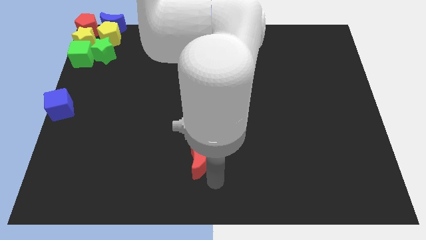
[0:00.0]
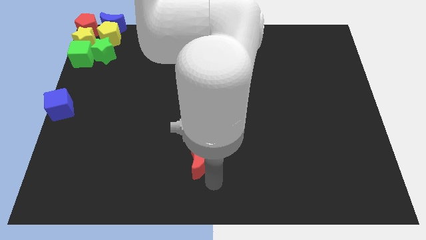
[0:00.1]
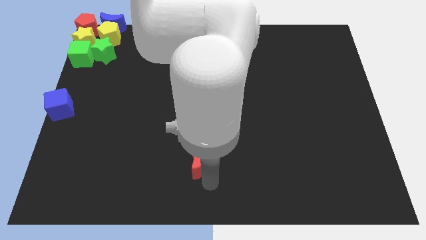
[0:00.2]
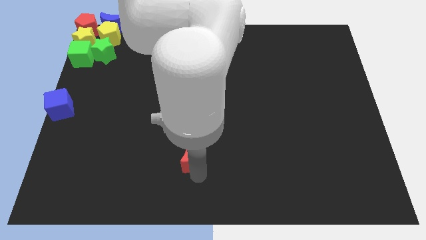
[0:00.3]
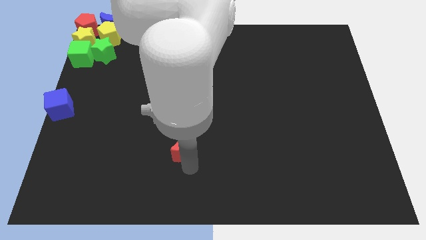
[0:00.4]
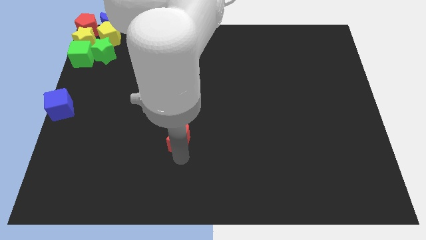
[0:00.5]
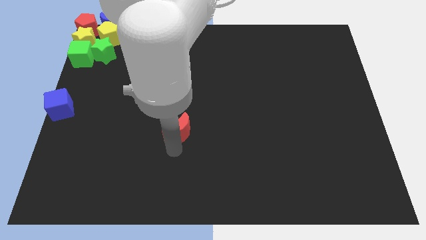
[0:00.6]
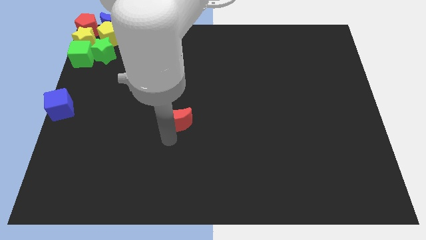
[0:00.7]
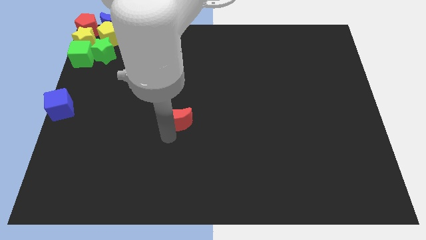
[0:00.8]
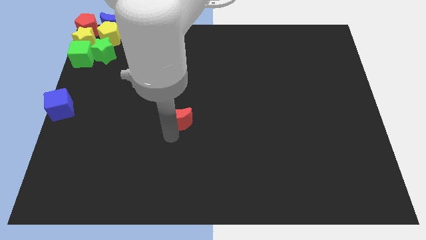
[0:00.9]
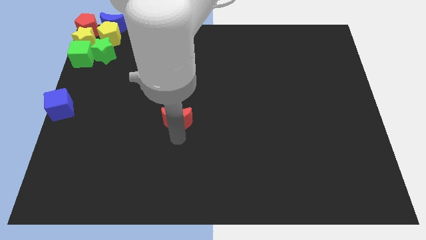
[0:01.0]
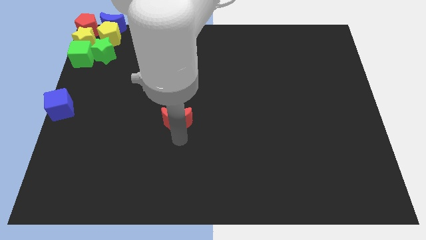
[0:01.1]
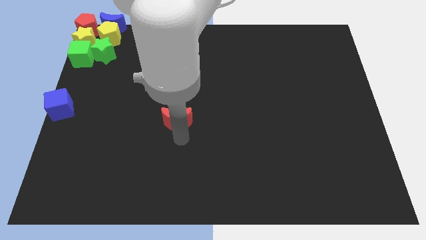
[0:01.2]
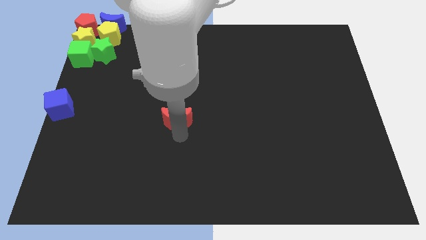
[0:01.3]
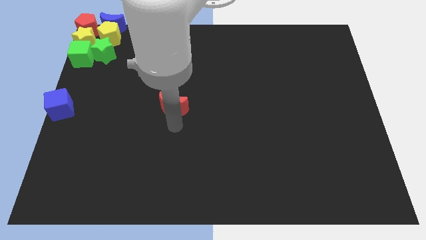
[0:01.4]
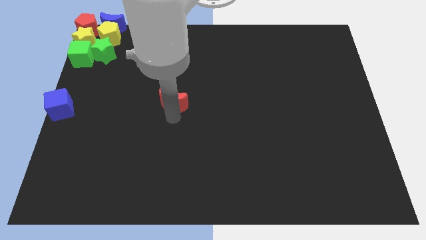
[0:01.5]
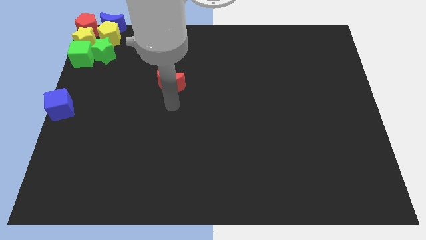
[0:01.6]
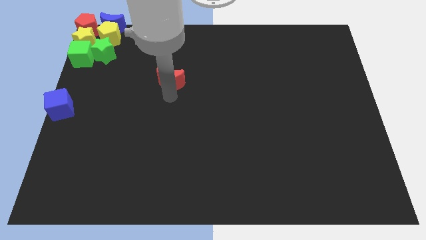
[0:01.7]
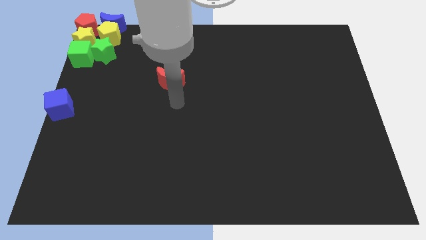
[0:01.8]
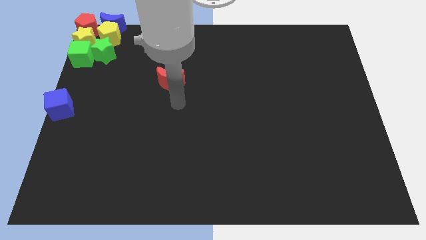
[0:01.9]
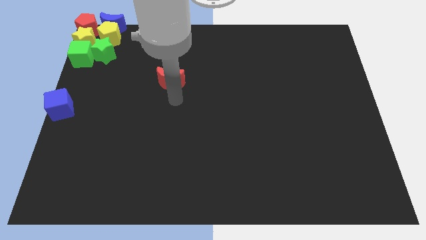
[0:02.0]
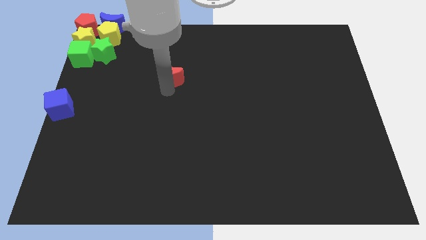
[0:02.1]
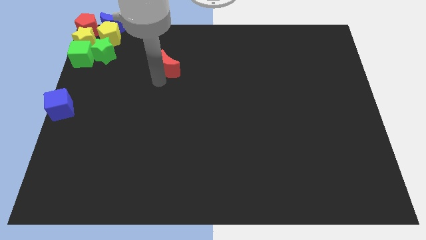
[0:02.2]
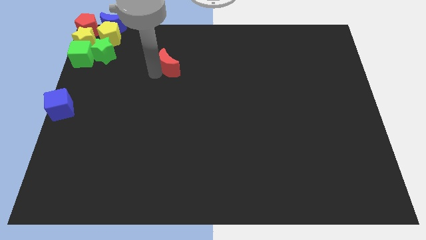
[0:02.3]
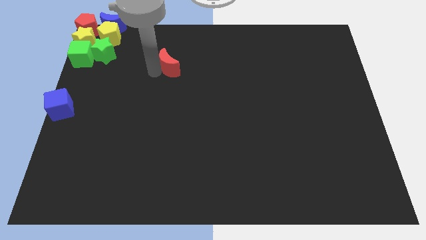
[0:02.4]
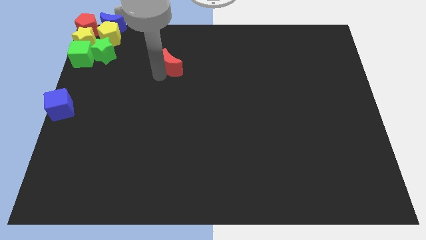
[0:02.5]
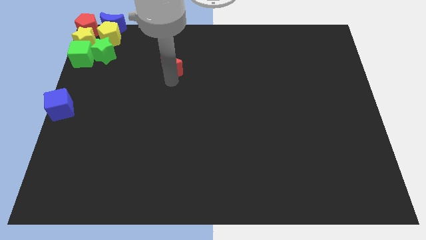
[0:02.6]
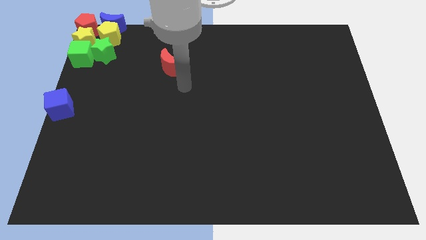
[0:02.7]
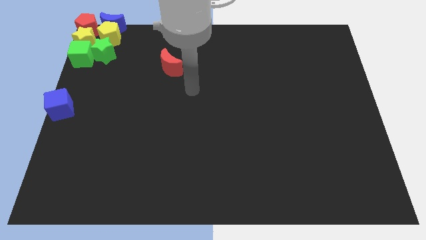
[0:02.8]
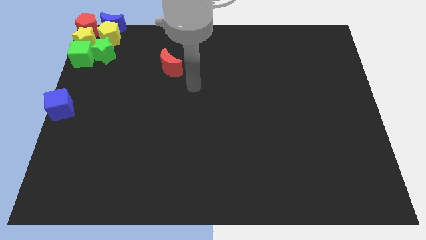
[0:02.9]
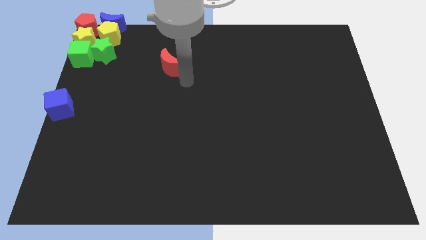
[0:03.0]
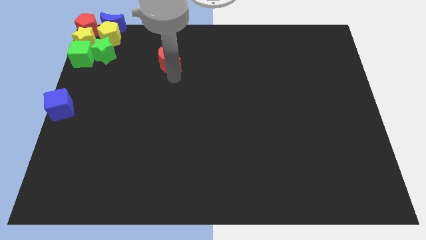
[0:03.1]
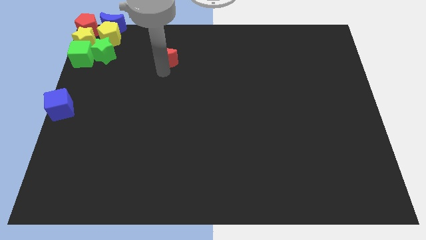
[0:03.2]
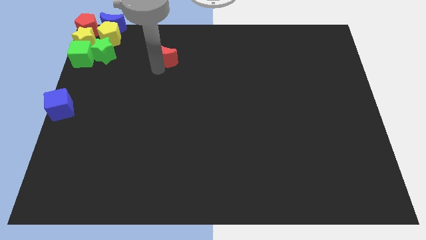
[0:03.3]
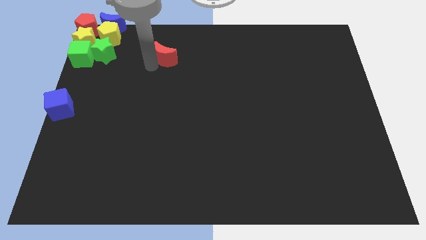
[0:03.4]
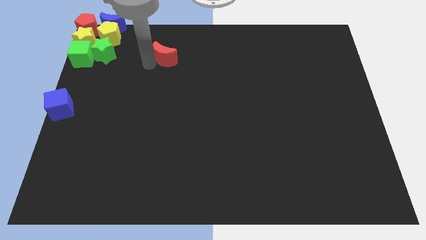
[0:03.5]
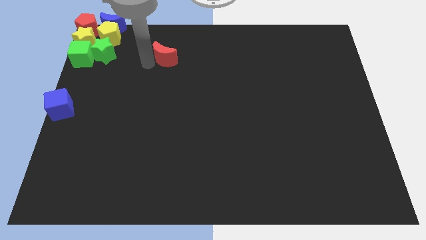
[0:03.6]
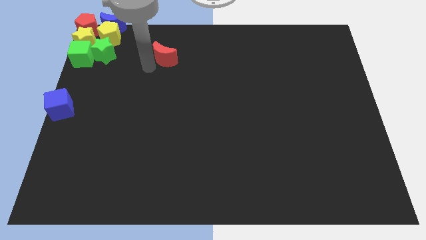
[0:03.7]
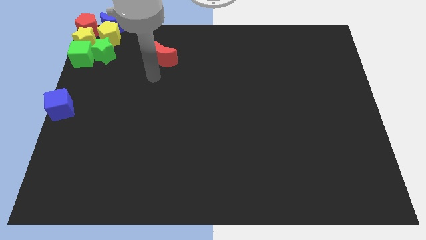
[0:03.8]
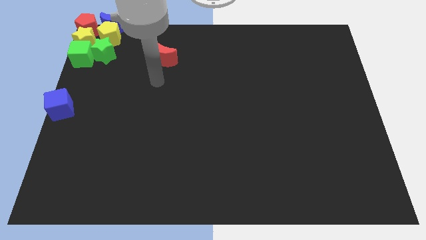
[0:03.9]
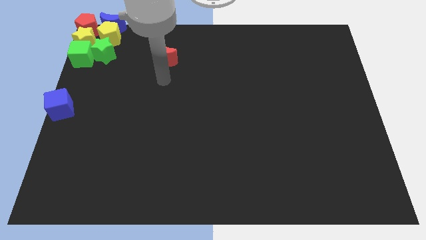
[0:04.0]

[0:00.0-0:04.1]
push the red crescent towards the top left side of the board

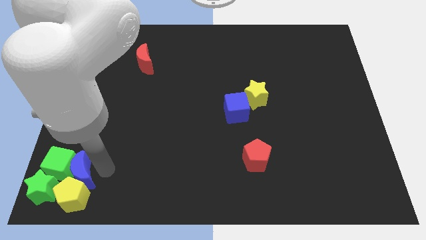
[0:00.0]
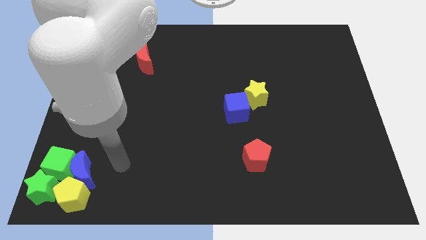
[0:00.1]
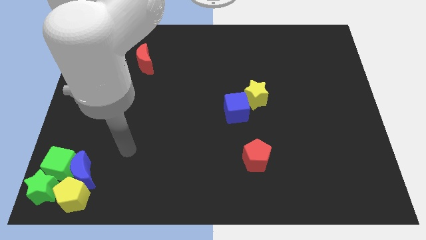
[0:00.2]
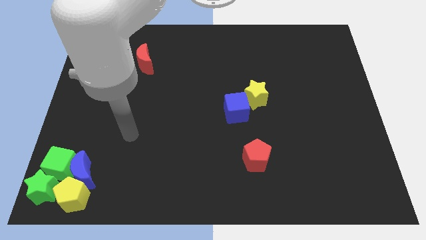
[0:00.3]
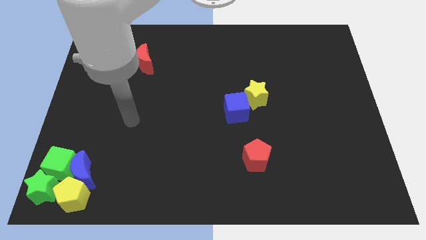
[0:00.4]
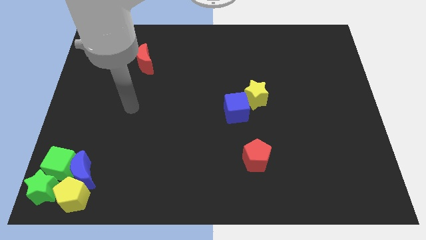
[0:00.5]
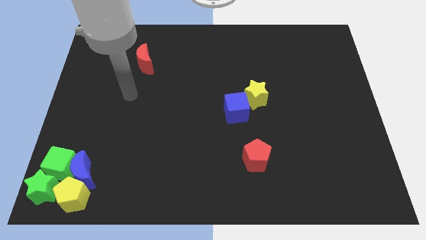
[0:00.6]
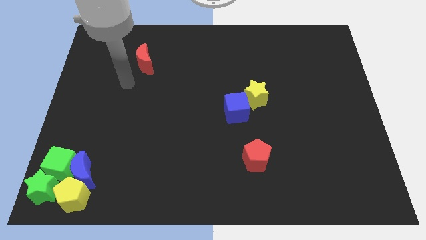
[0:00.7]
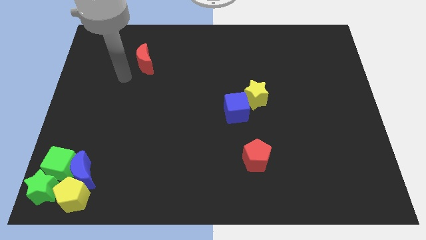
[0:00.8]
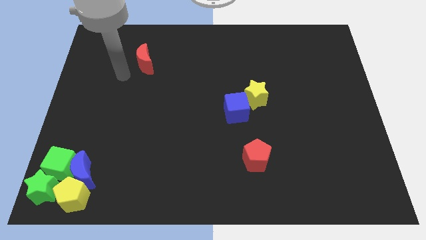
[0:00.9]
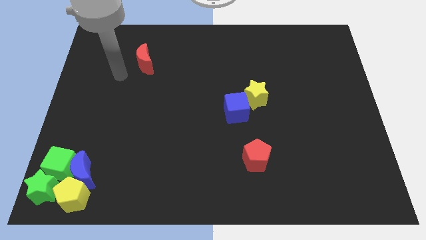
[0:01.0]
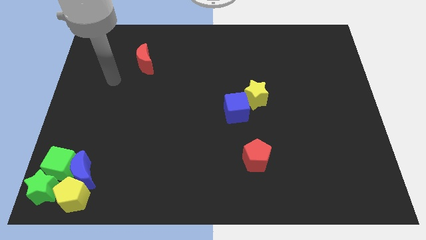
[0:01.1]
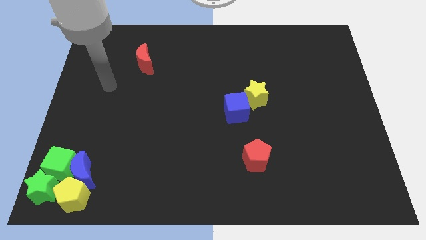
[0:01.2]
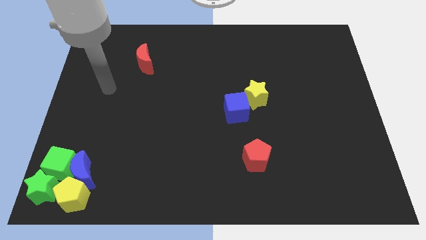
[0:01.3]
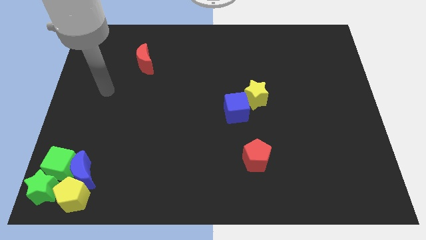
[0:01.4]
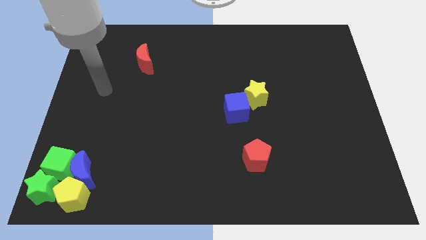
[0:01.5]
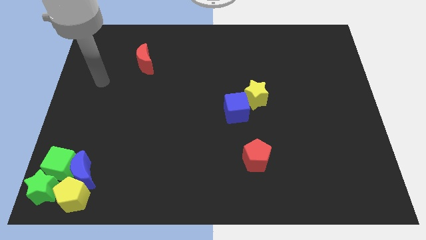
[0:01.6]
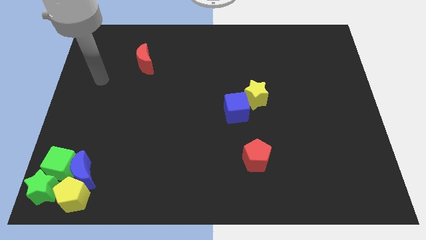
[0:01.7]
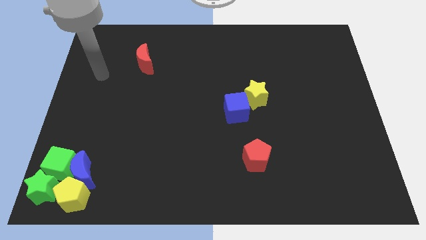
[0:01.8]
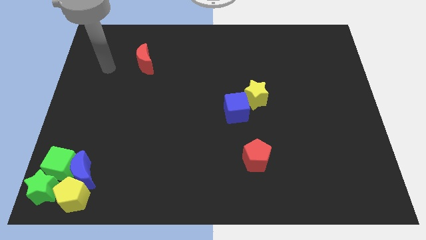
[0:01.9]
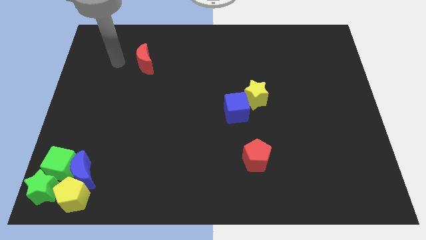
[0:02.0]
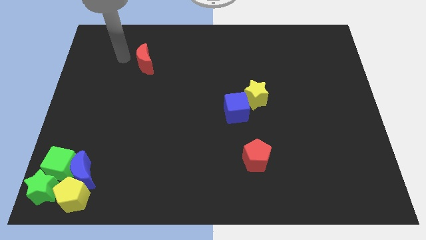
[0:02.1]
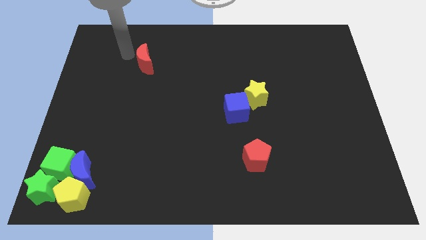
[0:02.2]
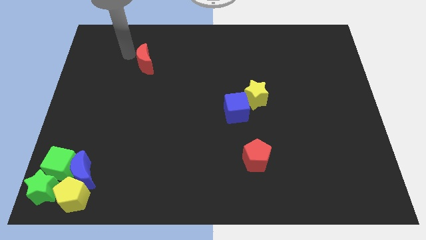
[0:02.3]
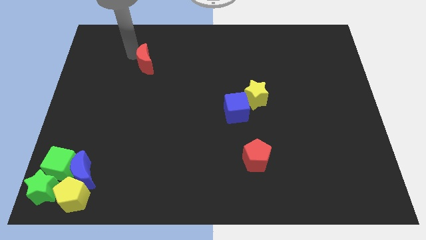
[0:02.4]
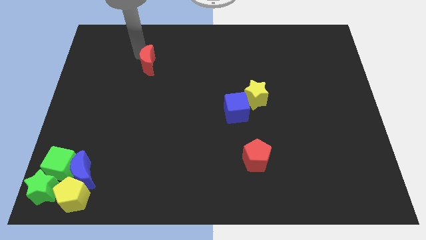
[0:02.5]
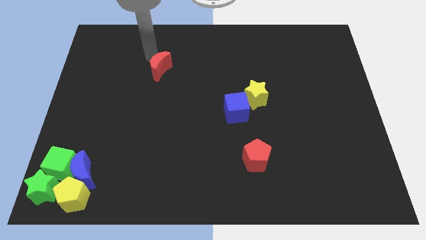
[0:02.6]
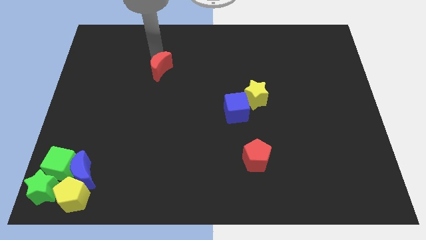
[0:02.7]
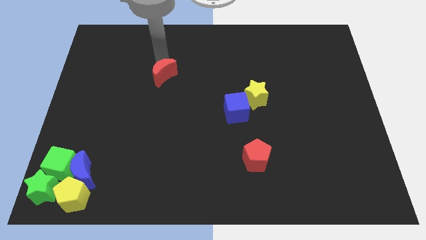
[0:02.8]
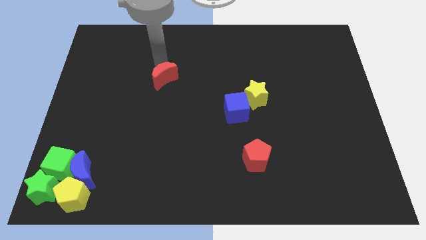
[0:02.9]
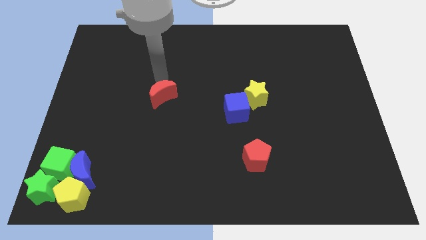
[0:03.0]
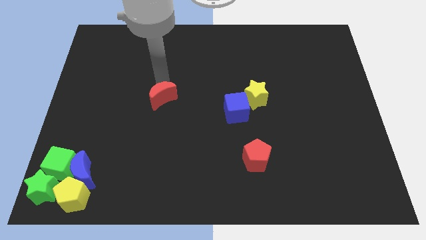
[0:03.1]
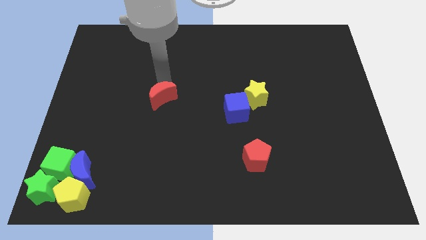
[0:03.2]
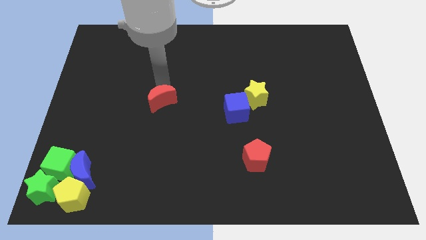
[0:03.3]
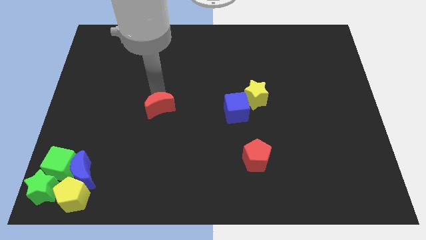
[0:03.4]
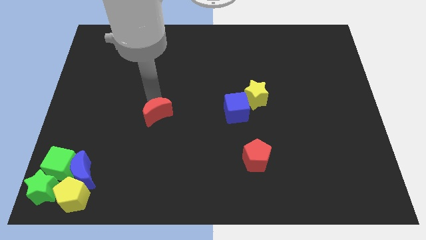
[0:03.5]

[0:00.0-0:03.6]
move the red crescent to the left of the blue cube

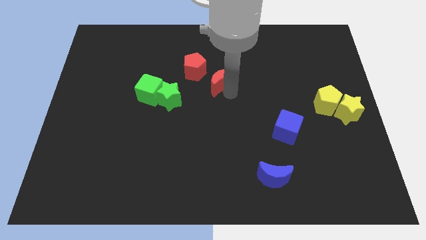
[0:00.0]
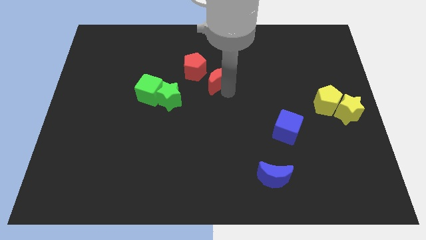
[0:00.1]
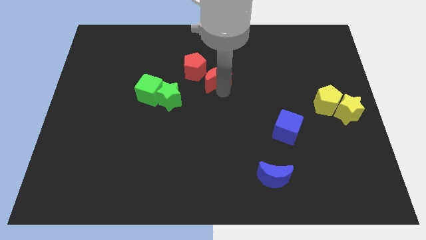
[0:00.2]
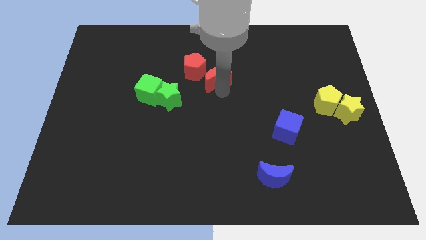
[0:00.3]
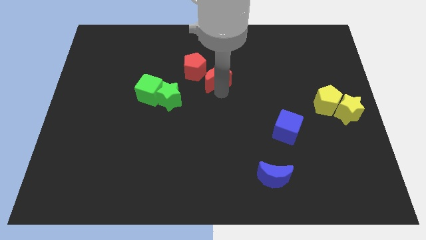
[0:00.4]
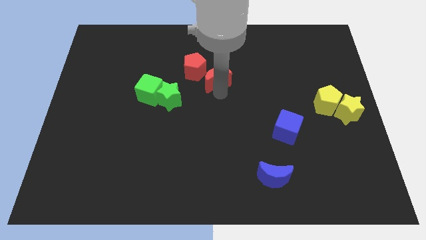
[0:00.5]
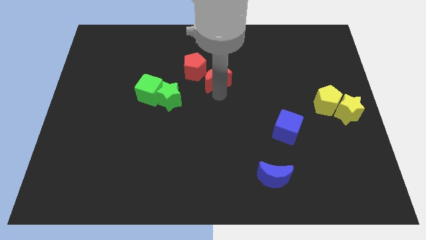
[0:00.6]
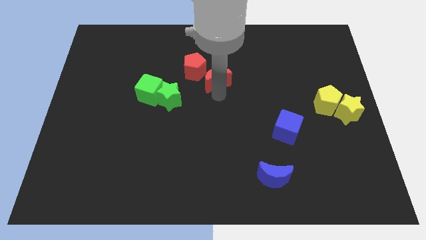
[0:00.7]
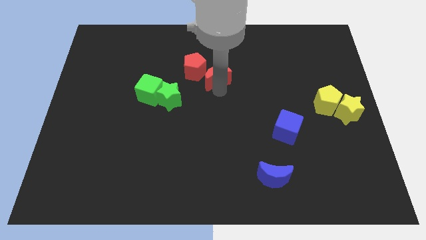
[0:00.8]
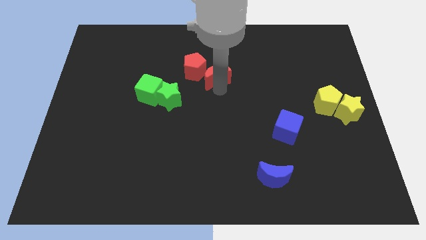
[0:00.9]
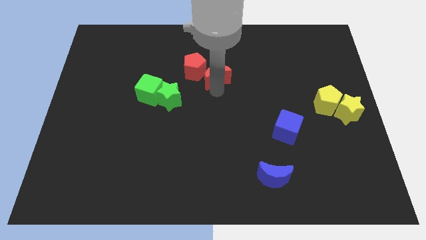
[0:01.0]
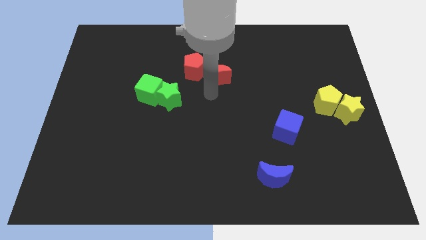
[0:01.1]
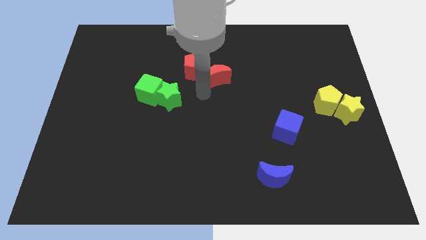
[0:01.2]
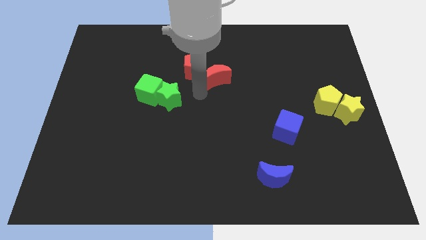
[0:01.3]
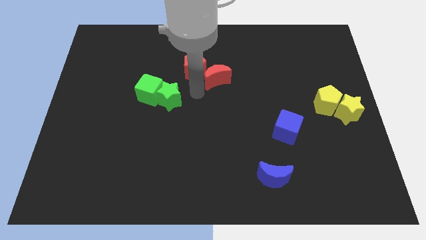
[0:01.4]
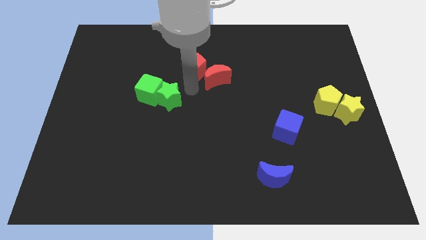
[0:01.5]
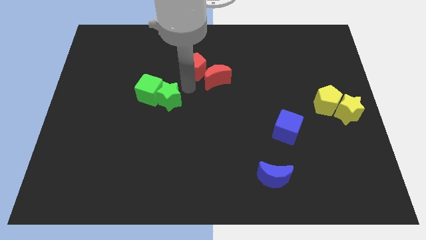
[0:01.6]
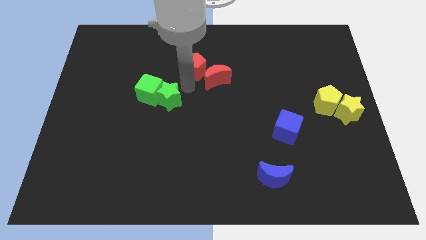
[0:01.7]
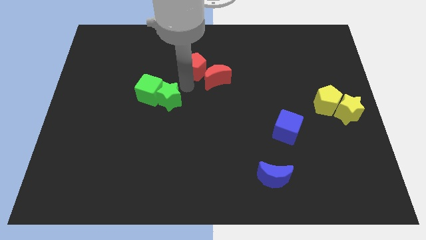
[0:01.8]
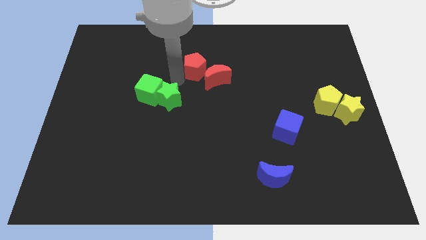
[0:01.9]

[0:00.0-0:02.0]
move the red moon close to the red pentagon
